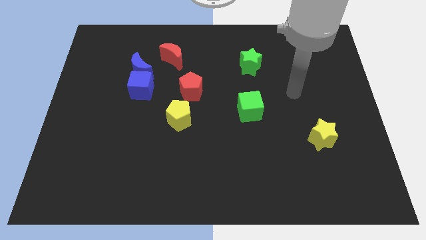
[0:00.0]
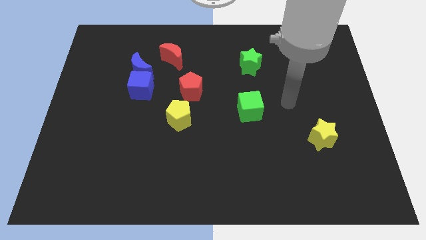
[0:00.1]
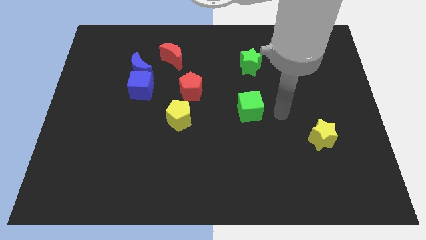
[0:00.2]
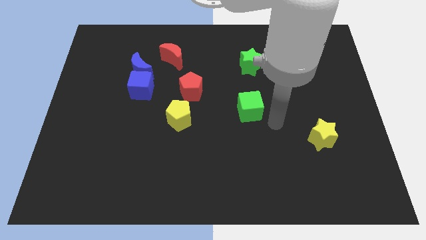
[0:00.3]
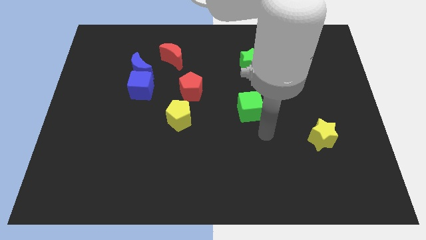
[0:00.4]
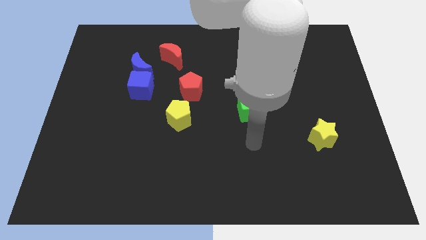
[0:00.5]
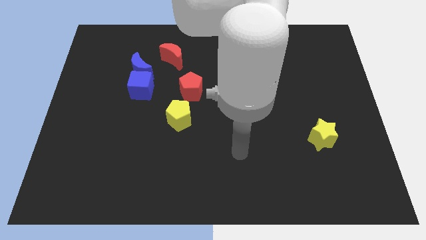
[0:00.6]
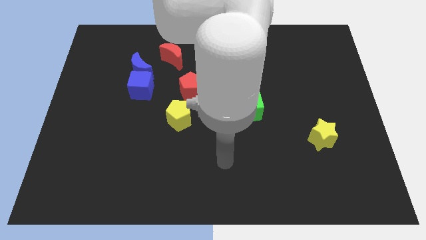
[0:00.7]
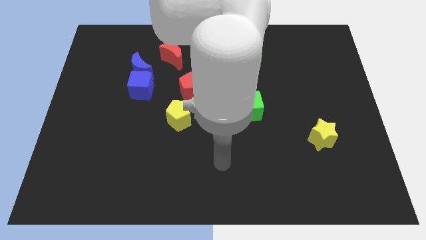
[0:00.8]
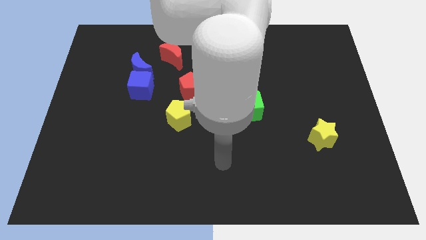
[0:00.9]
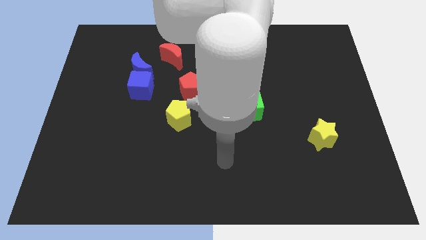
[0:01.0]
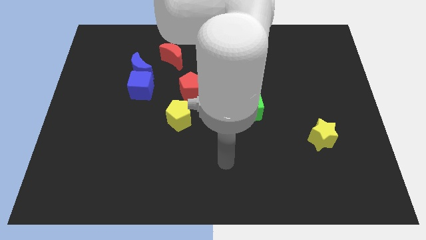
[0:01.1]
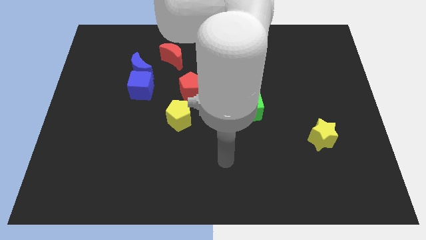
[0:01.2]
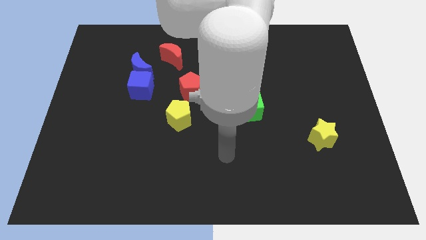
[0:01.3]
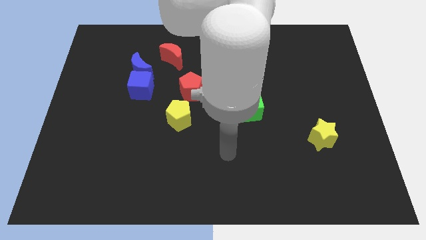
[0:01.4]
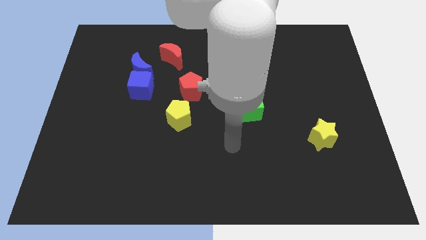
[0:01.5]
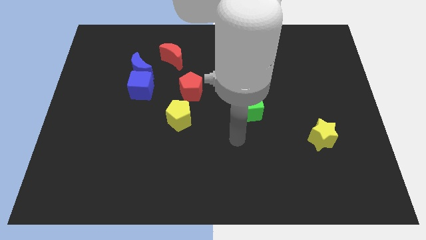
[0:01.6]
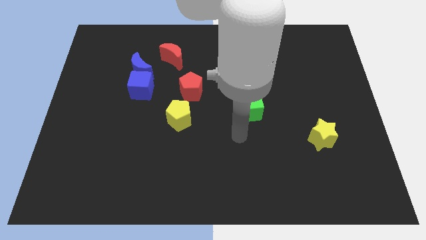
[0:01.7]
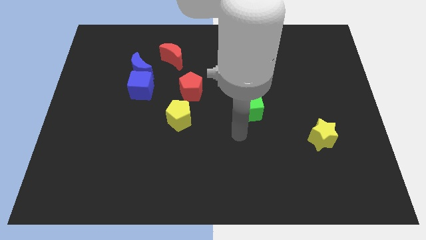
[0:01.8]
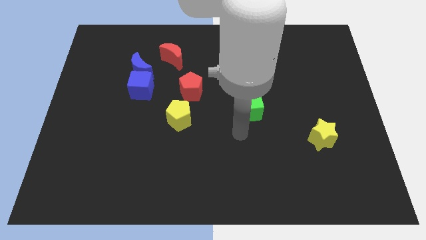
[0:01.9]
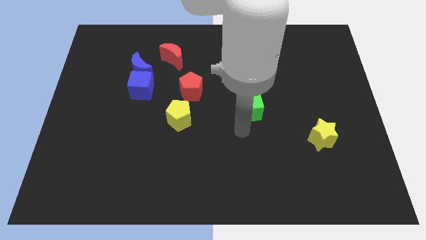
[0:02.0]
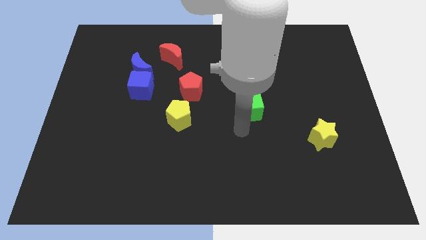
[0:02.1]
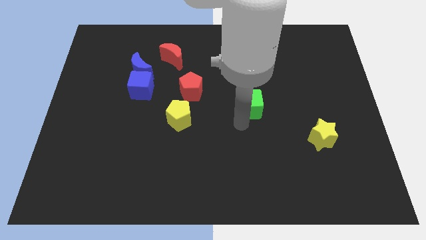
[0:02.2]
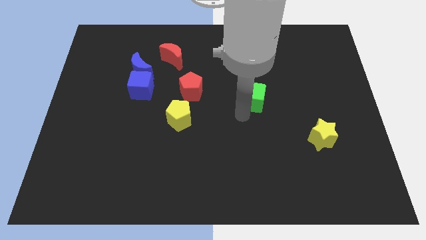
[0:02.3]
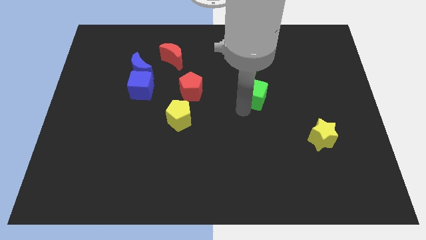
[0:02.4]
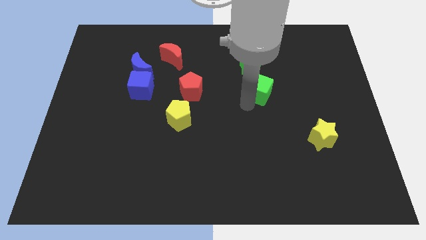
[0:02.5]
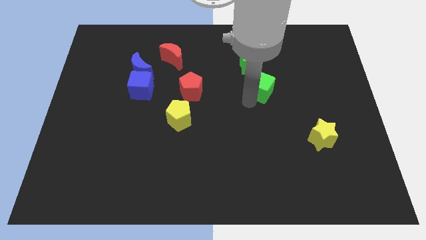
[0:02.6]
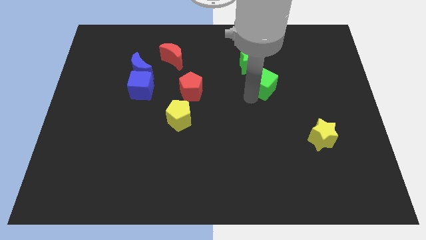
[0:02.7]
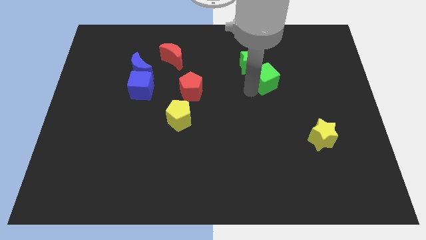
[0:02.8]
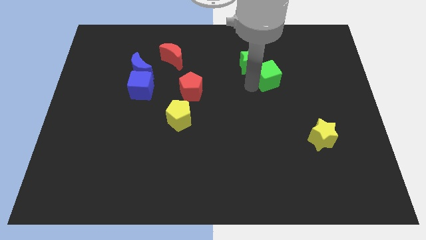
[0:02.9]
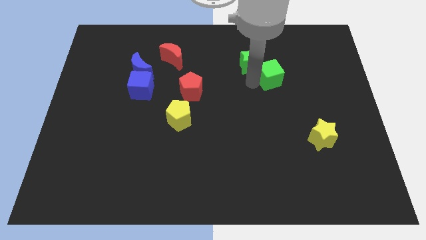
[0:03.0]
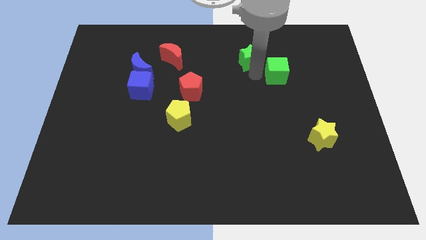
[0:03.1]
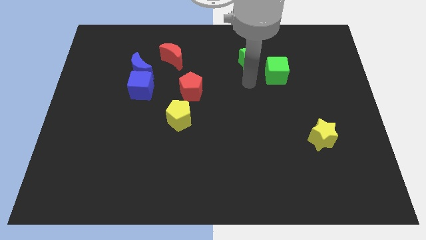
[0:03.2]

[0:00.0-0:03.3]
move the green cube towards the right of the green star

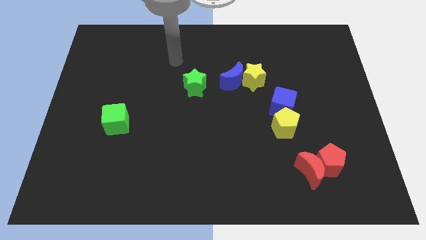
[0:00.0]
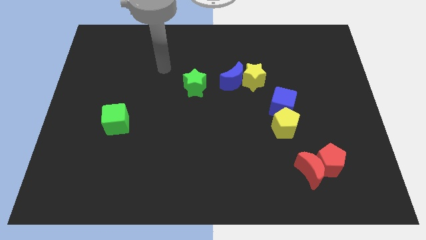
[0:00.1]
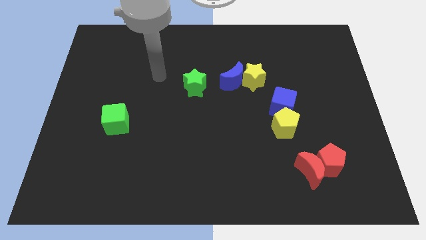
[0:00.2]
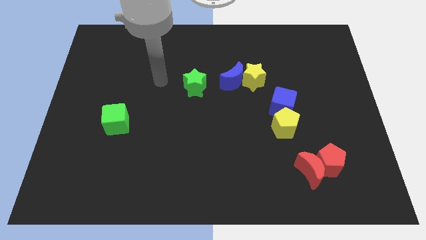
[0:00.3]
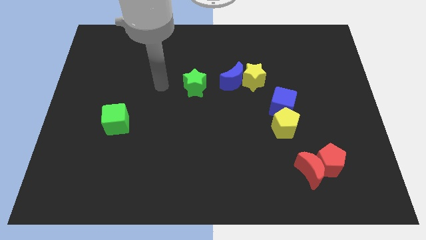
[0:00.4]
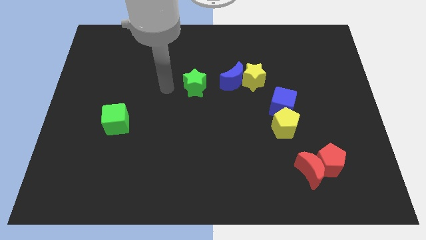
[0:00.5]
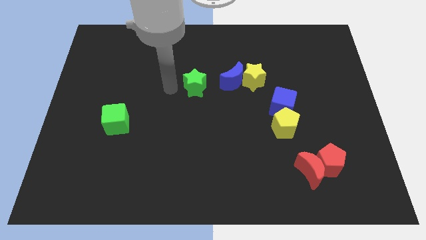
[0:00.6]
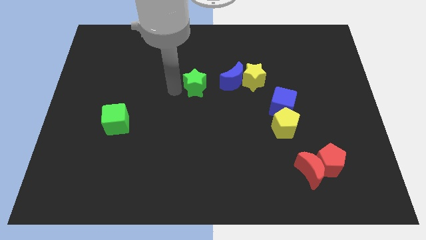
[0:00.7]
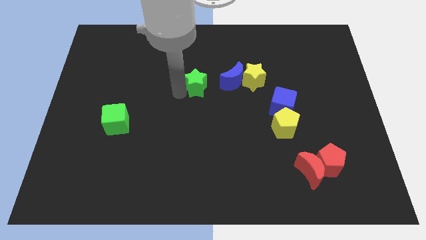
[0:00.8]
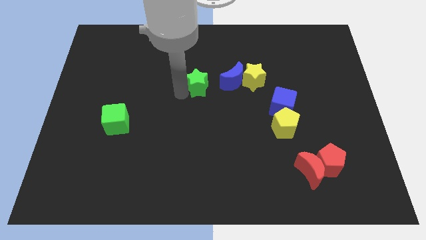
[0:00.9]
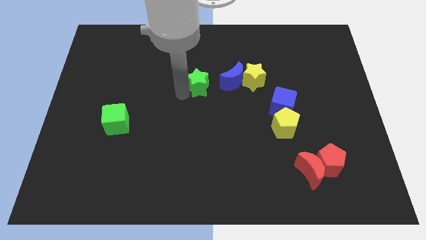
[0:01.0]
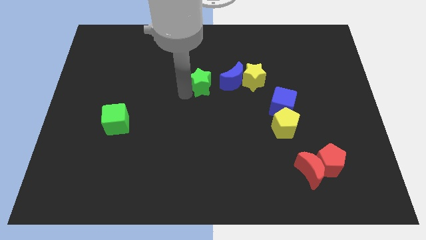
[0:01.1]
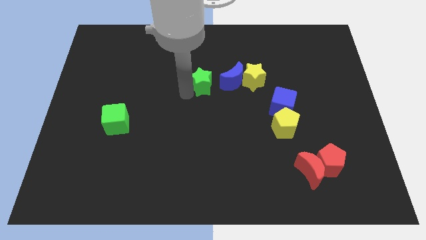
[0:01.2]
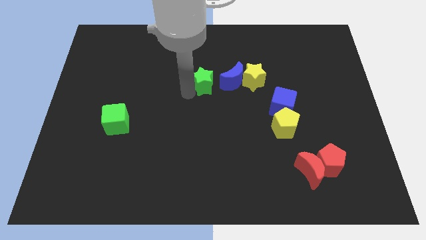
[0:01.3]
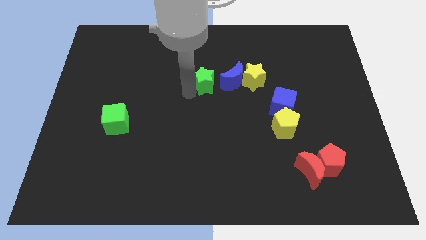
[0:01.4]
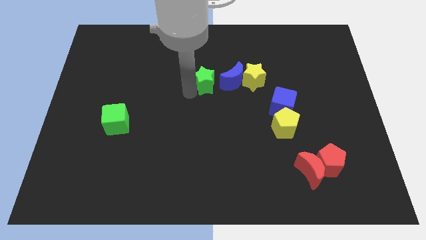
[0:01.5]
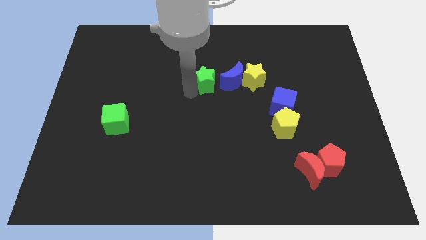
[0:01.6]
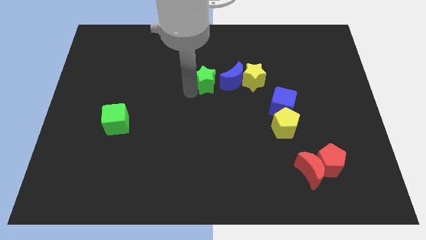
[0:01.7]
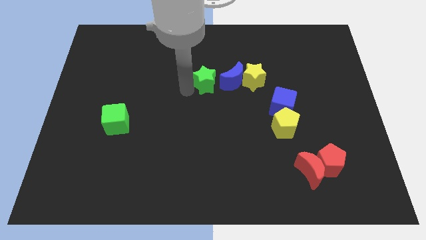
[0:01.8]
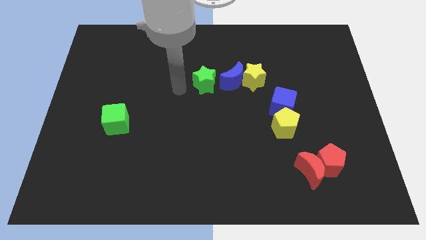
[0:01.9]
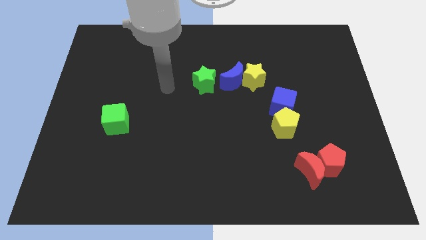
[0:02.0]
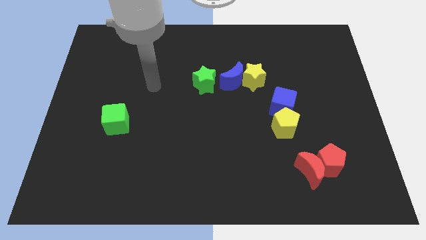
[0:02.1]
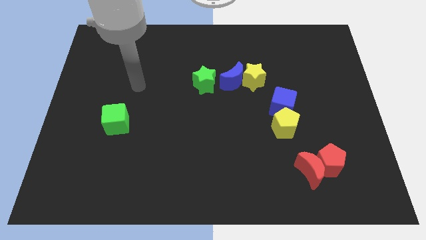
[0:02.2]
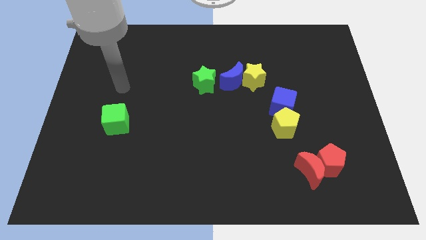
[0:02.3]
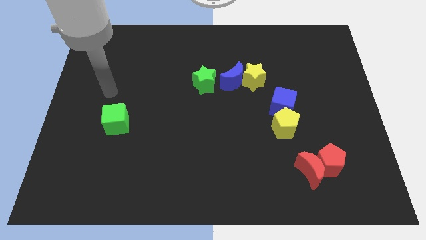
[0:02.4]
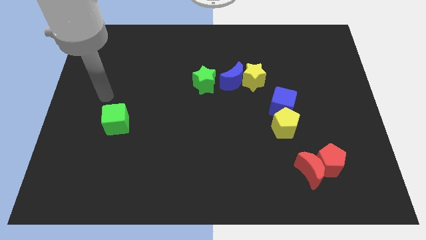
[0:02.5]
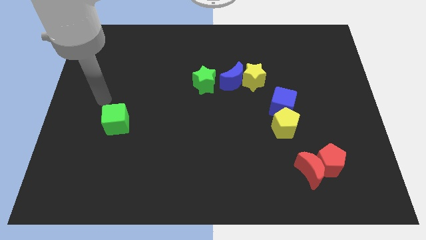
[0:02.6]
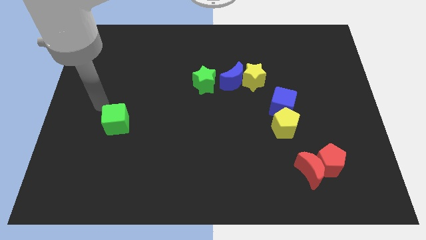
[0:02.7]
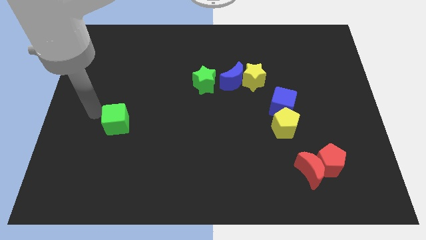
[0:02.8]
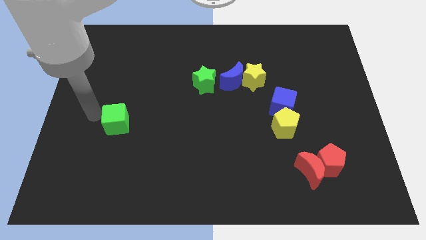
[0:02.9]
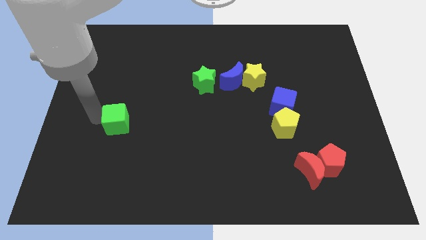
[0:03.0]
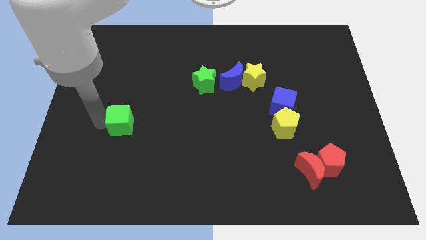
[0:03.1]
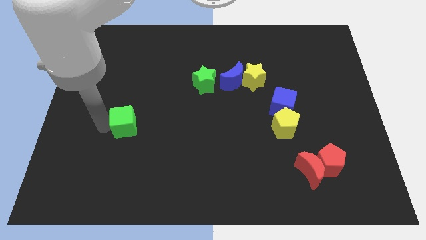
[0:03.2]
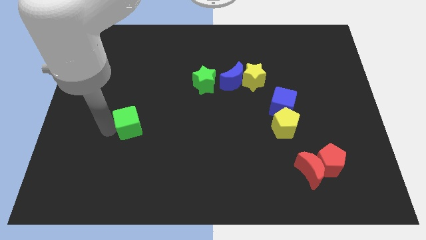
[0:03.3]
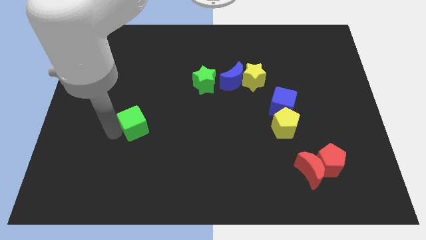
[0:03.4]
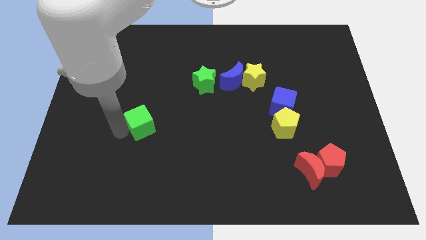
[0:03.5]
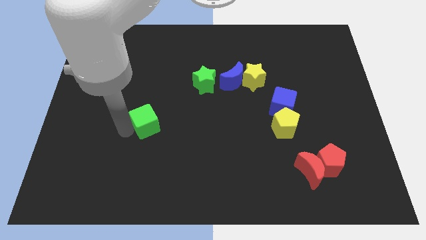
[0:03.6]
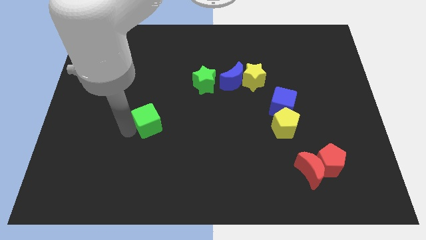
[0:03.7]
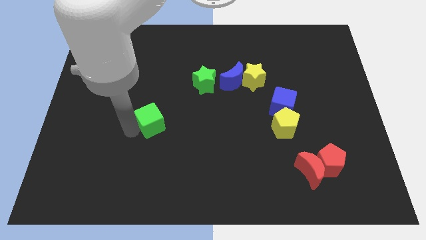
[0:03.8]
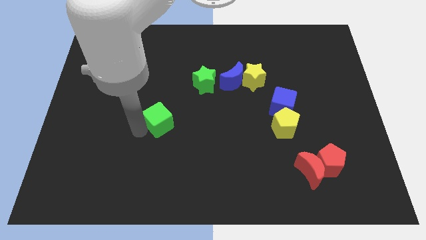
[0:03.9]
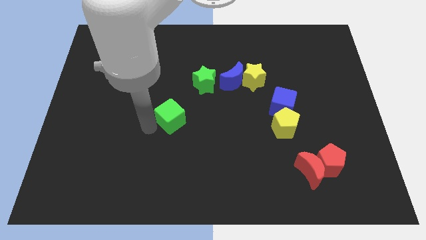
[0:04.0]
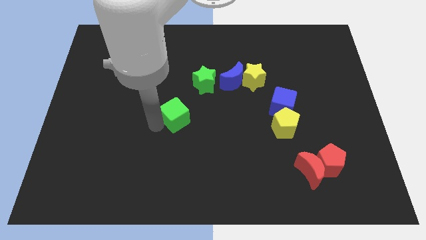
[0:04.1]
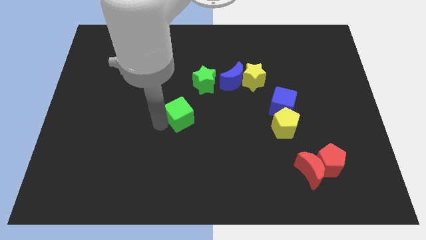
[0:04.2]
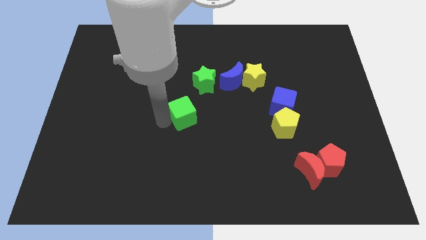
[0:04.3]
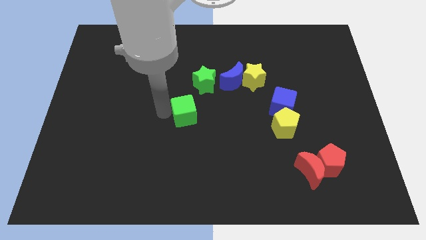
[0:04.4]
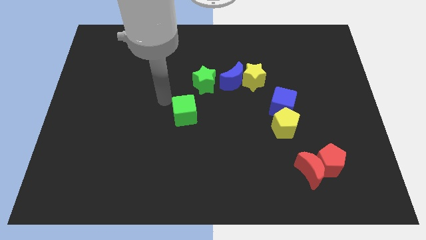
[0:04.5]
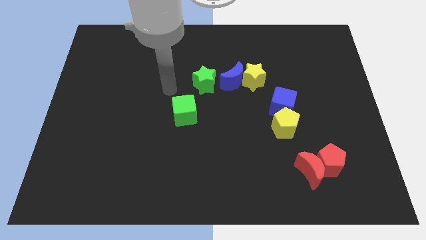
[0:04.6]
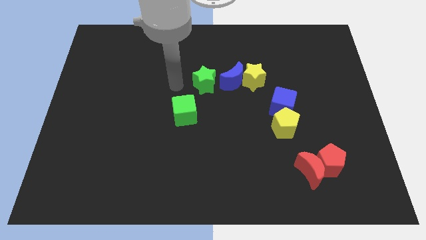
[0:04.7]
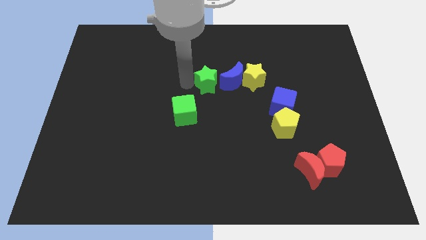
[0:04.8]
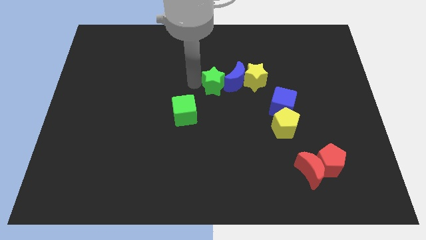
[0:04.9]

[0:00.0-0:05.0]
move the green star and green cube to the center

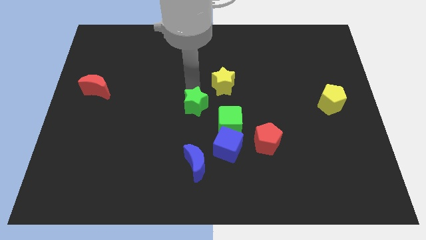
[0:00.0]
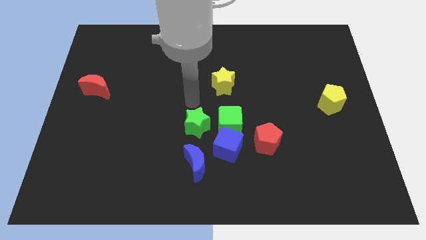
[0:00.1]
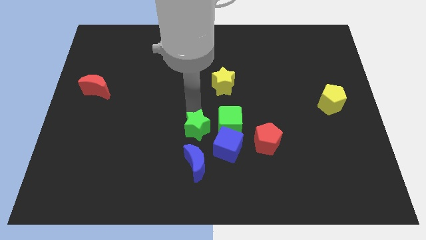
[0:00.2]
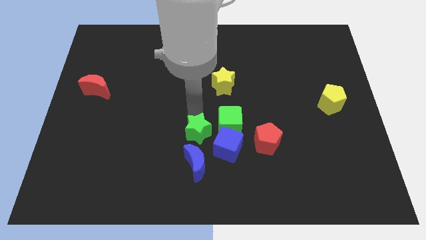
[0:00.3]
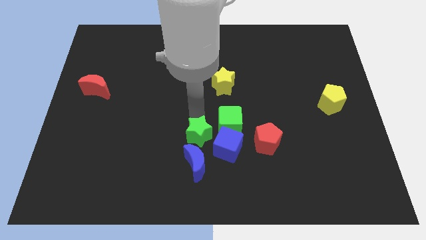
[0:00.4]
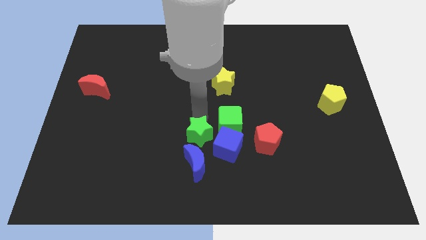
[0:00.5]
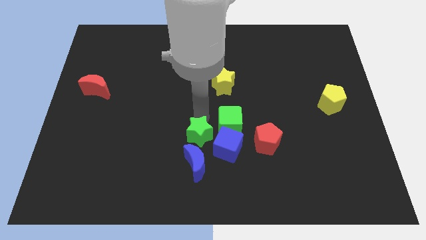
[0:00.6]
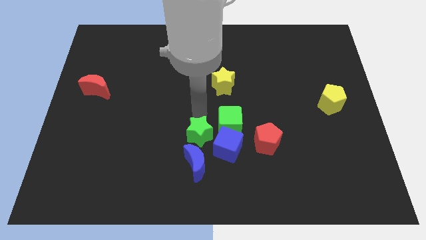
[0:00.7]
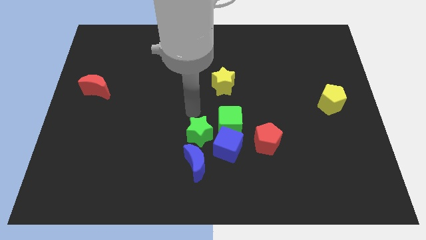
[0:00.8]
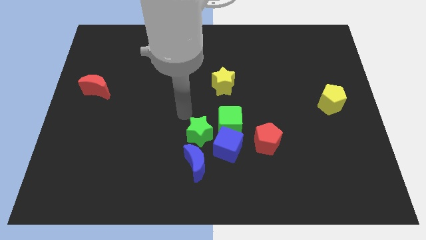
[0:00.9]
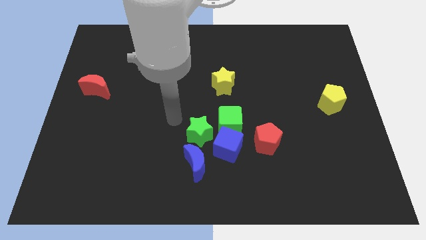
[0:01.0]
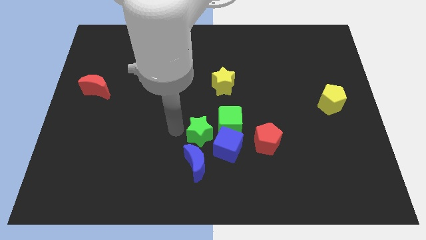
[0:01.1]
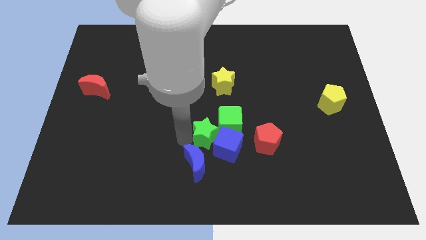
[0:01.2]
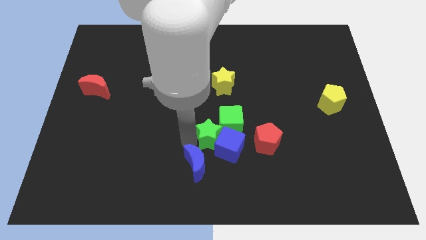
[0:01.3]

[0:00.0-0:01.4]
push the green star into the blue cube
